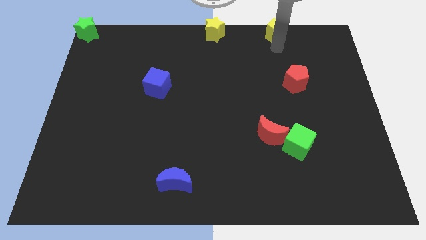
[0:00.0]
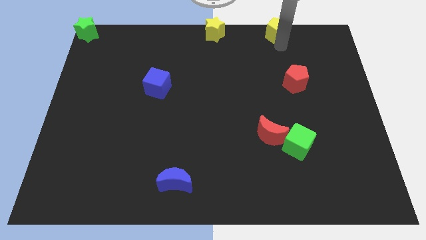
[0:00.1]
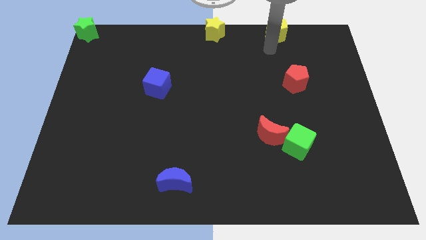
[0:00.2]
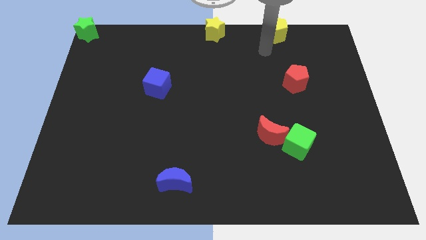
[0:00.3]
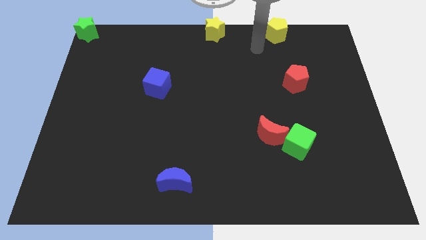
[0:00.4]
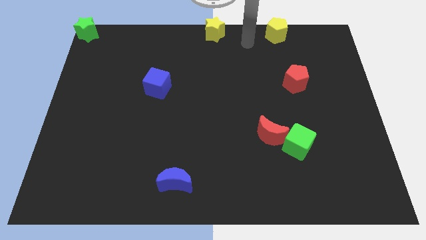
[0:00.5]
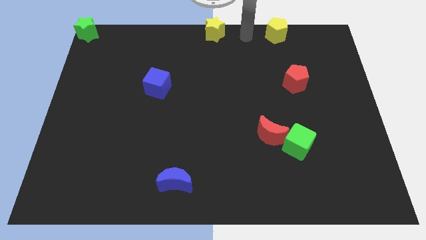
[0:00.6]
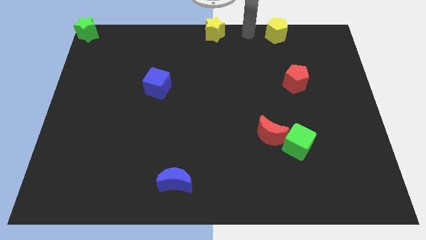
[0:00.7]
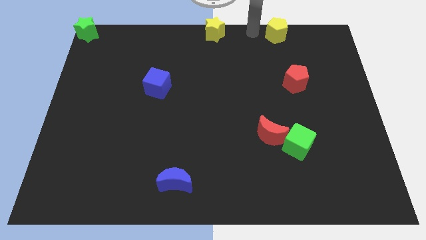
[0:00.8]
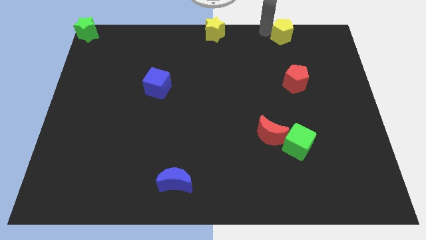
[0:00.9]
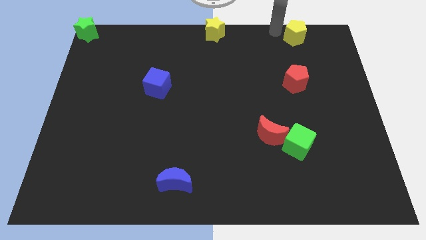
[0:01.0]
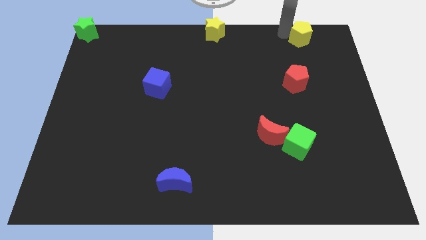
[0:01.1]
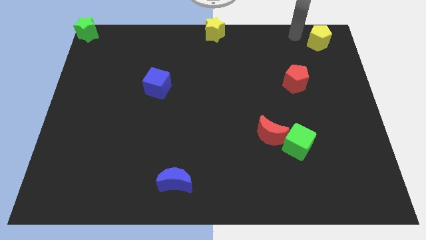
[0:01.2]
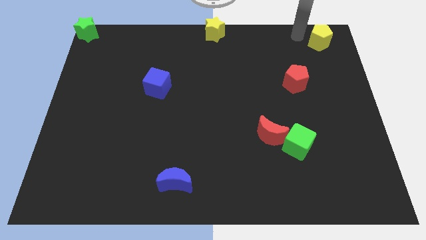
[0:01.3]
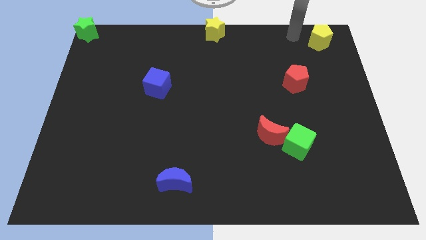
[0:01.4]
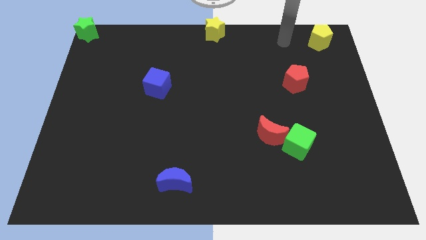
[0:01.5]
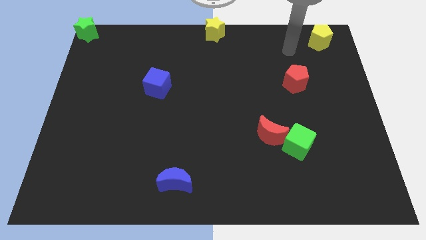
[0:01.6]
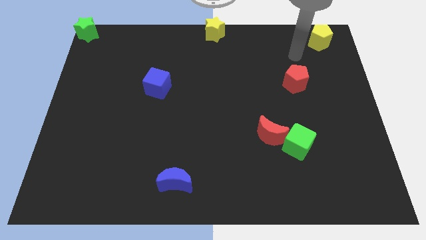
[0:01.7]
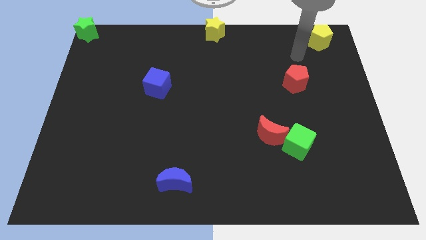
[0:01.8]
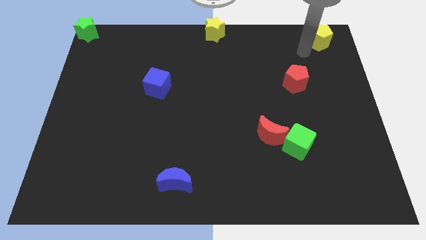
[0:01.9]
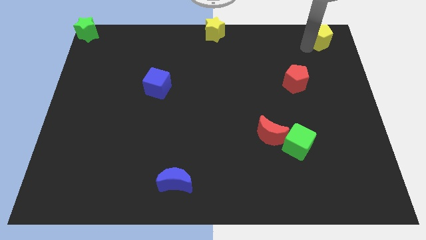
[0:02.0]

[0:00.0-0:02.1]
move the yellow pentagon towards the right

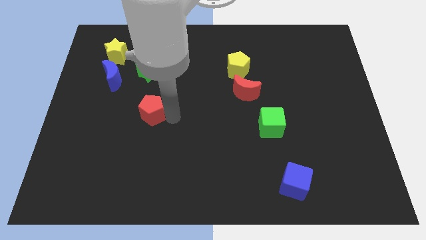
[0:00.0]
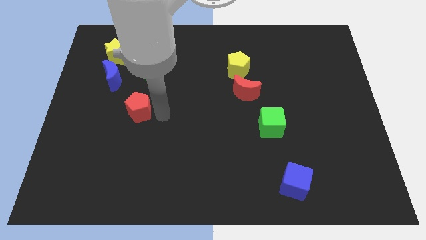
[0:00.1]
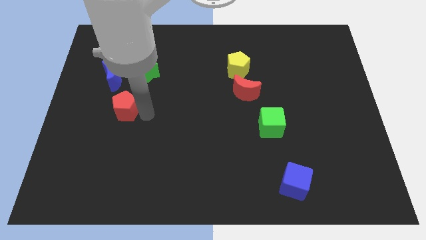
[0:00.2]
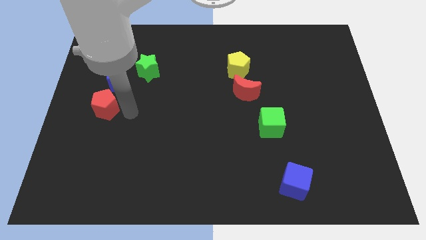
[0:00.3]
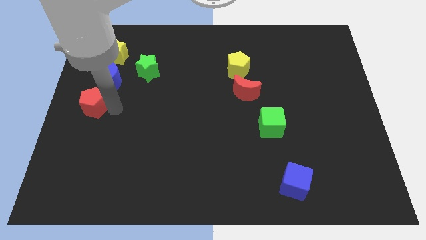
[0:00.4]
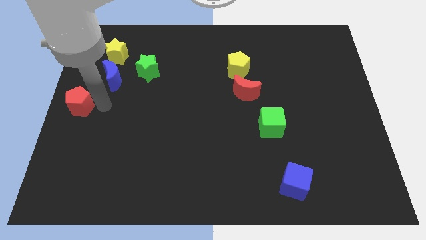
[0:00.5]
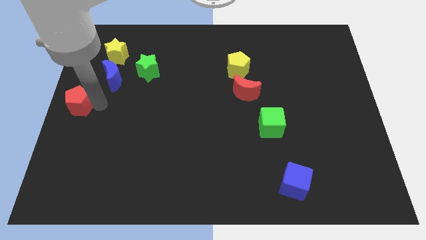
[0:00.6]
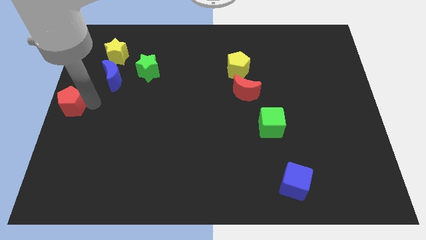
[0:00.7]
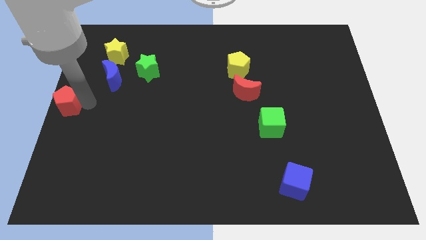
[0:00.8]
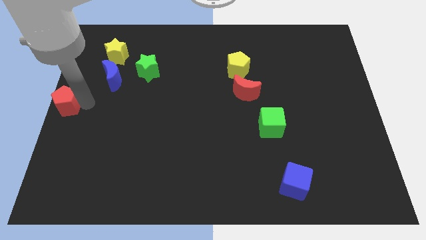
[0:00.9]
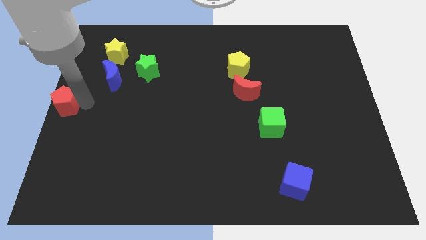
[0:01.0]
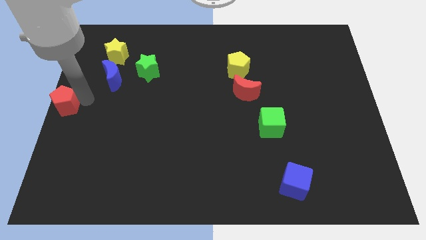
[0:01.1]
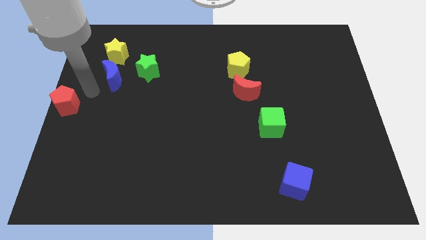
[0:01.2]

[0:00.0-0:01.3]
put the red pentagon to the center left of the board

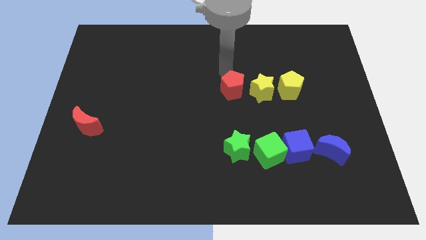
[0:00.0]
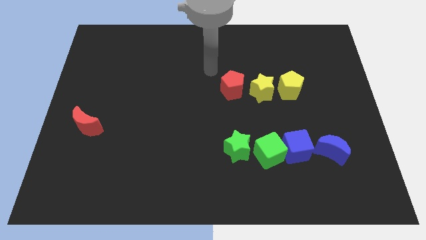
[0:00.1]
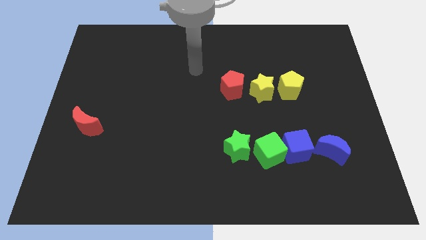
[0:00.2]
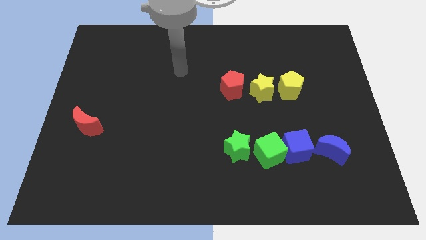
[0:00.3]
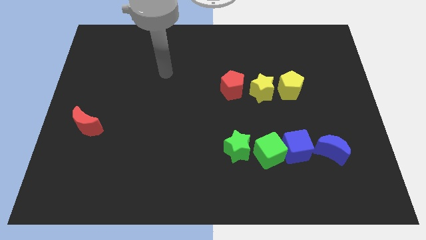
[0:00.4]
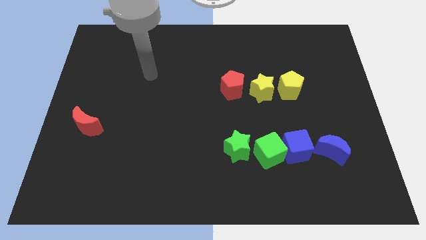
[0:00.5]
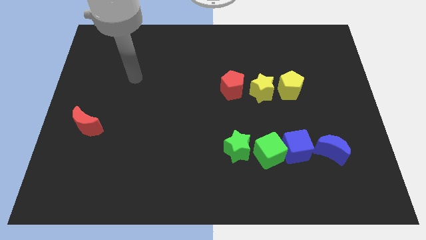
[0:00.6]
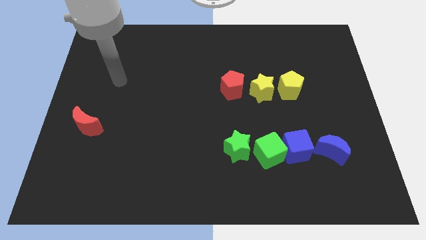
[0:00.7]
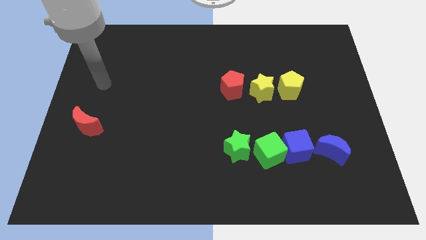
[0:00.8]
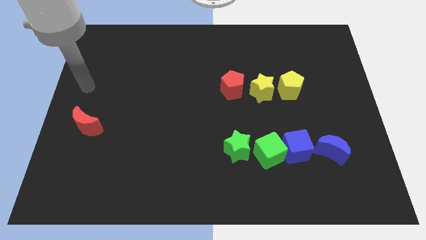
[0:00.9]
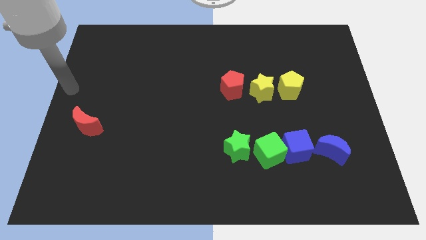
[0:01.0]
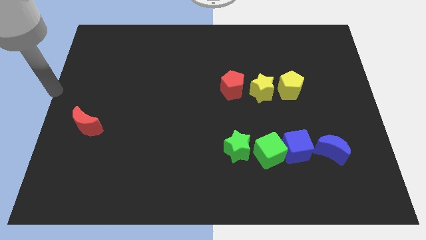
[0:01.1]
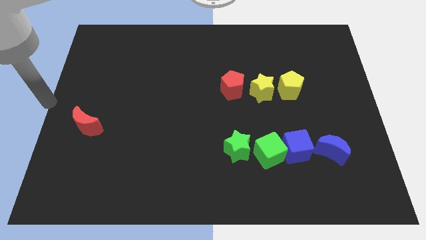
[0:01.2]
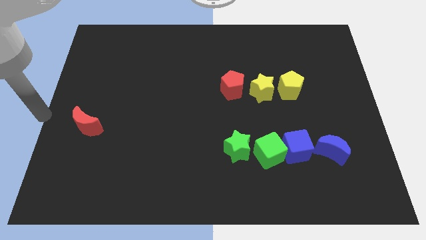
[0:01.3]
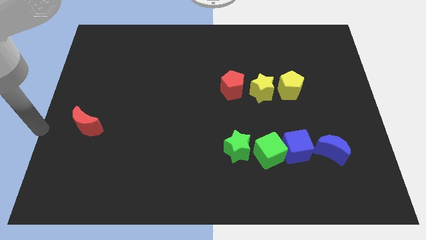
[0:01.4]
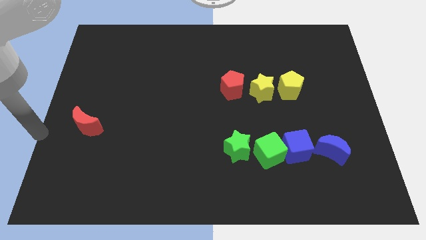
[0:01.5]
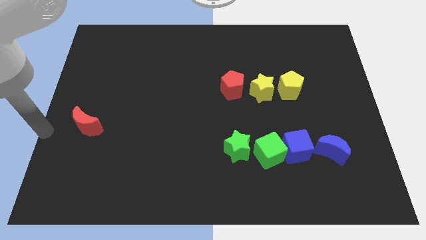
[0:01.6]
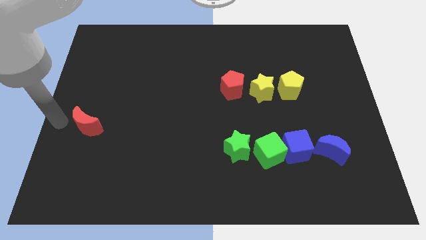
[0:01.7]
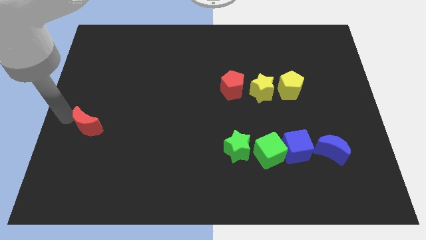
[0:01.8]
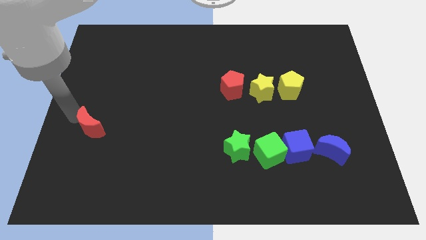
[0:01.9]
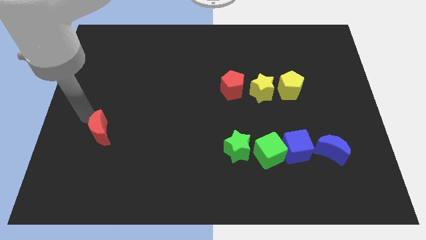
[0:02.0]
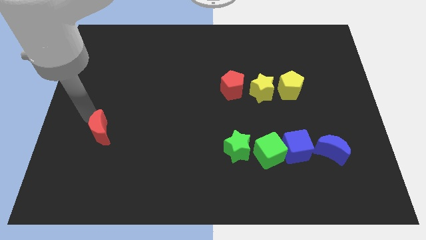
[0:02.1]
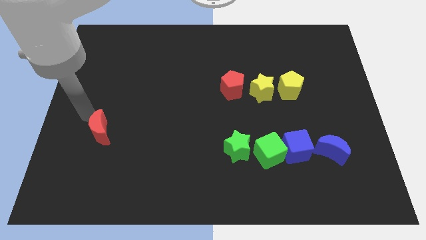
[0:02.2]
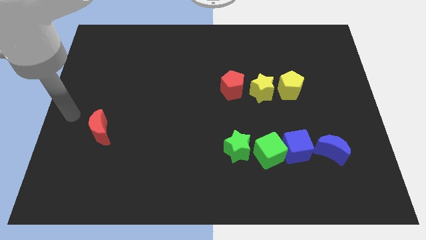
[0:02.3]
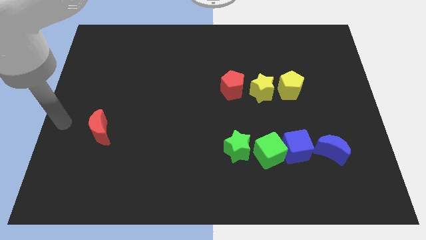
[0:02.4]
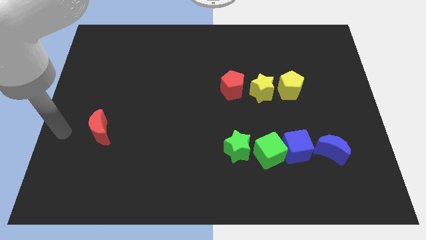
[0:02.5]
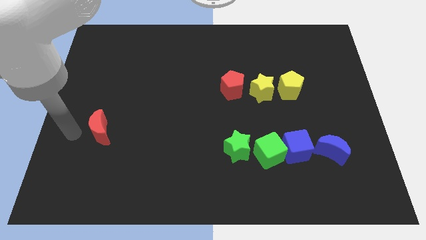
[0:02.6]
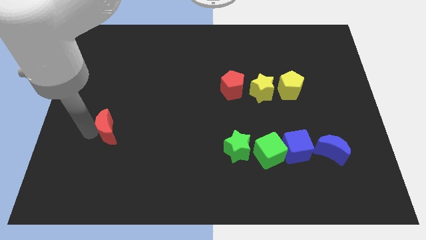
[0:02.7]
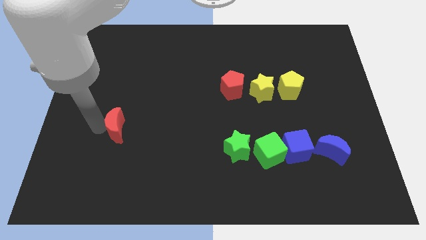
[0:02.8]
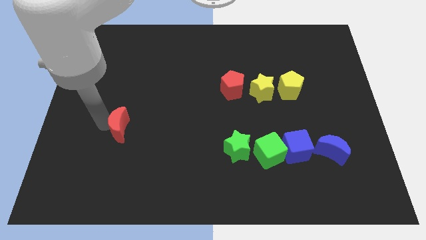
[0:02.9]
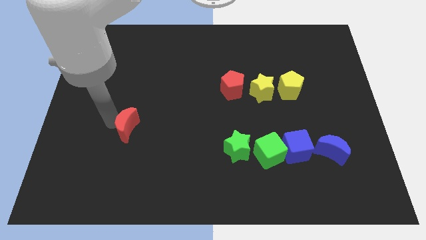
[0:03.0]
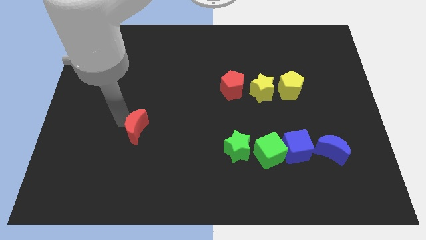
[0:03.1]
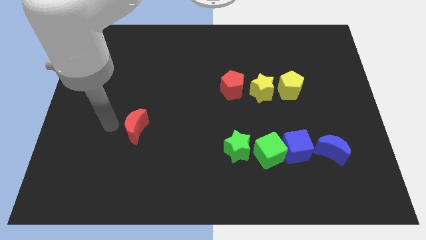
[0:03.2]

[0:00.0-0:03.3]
slide the red moon towards the center

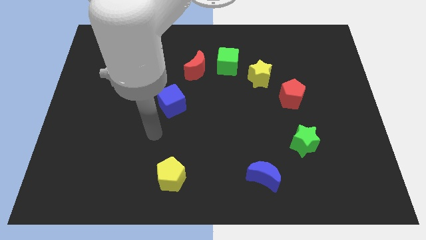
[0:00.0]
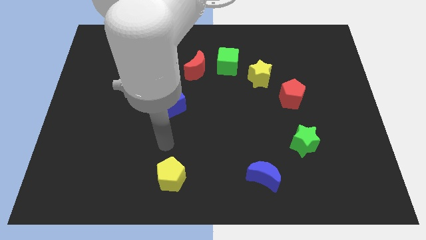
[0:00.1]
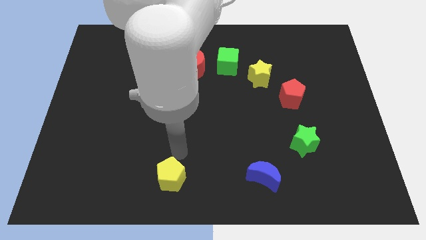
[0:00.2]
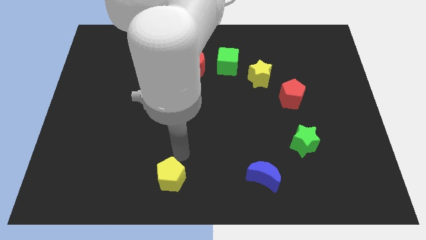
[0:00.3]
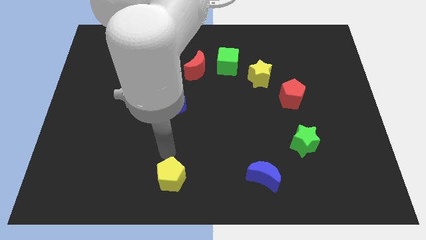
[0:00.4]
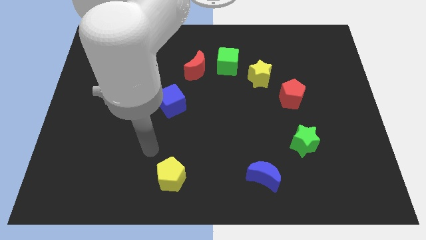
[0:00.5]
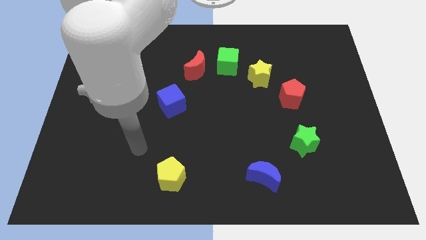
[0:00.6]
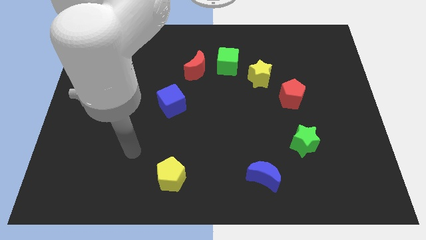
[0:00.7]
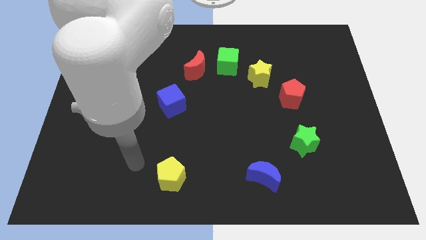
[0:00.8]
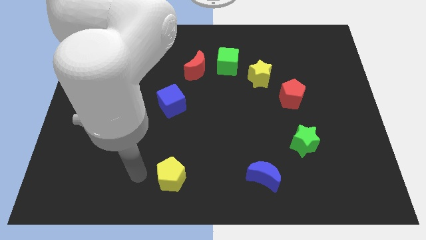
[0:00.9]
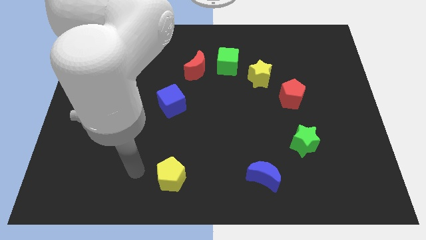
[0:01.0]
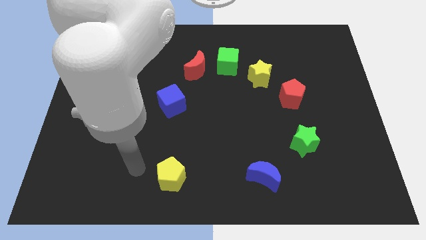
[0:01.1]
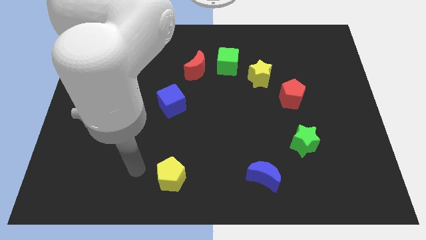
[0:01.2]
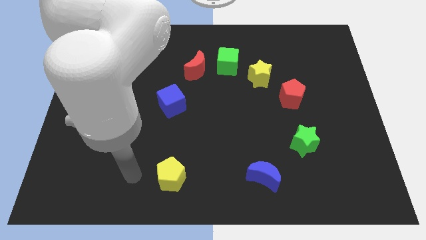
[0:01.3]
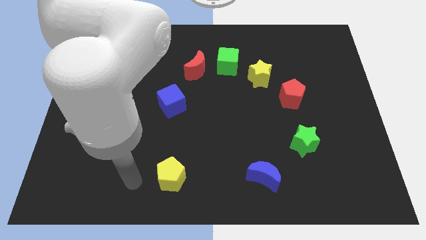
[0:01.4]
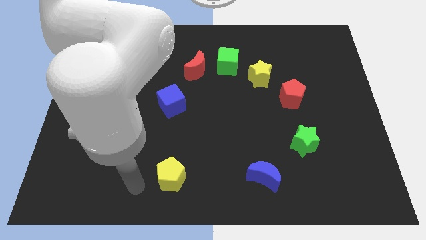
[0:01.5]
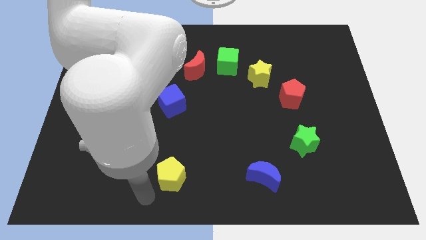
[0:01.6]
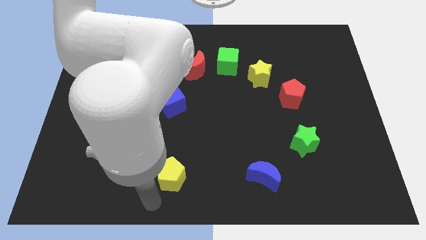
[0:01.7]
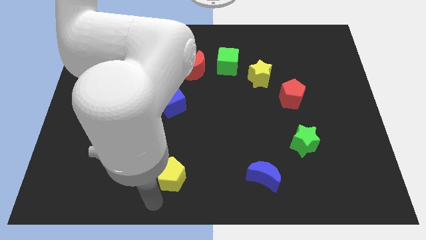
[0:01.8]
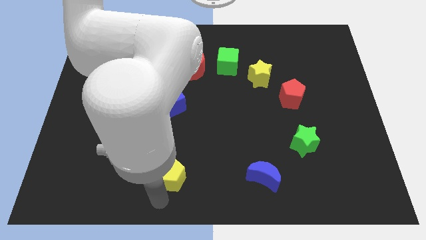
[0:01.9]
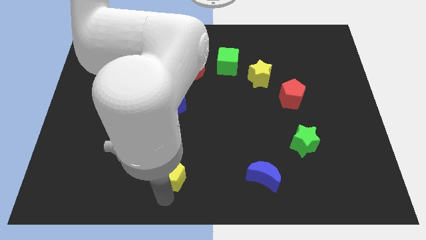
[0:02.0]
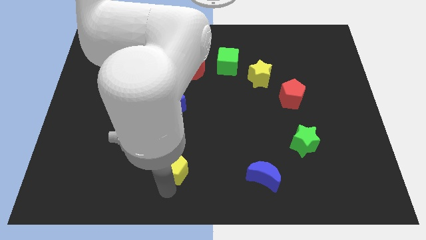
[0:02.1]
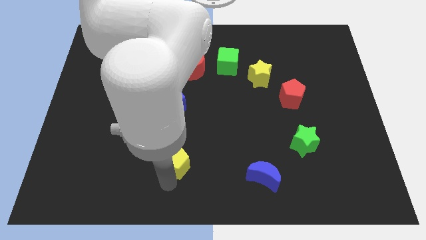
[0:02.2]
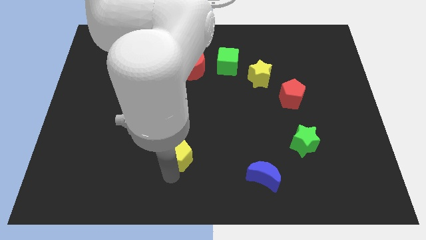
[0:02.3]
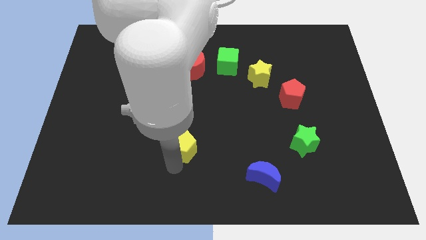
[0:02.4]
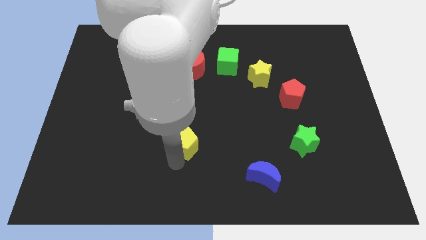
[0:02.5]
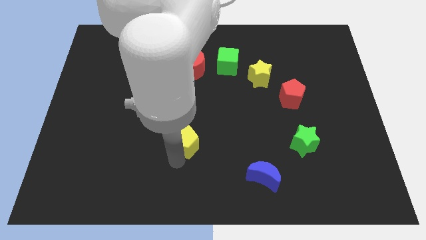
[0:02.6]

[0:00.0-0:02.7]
slide yellow pentagon slightly towards upwards
